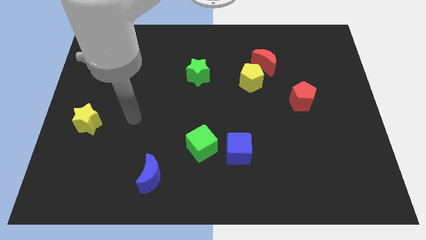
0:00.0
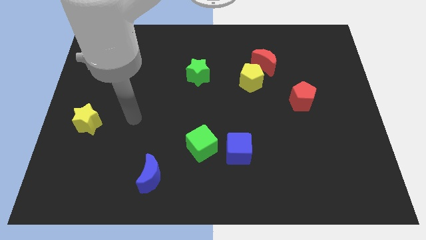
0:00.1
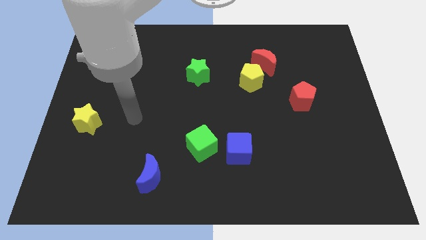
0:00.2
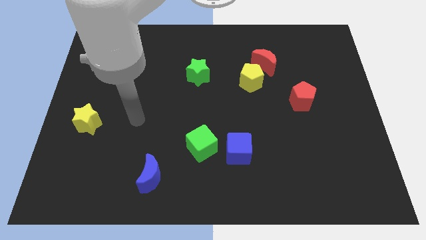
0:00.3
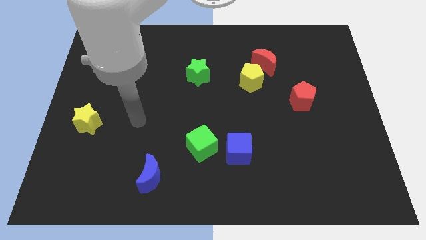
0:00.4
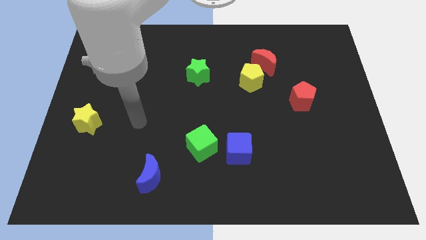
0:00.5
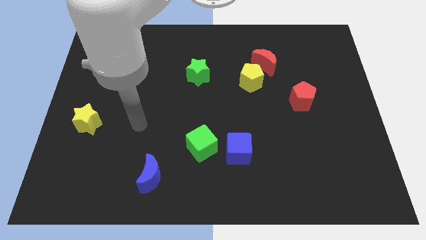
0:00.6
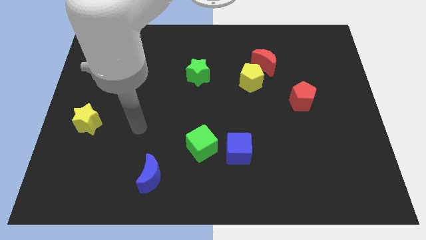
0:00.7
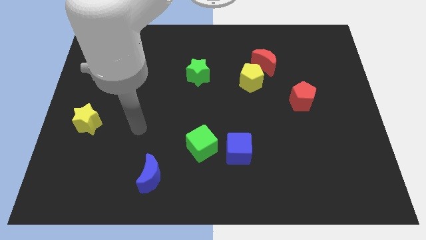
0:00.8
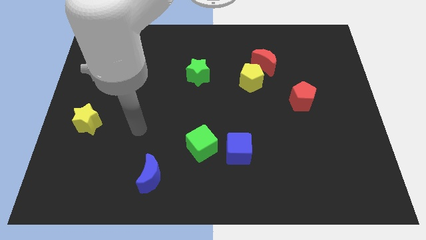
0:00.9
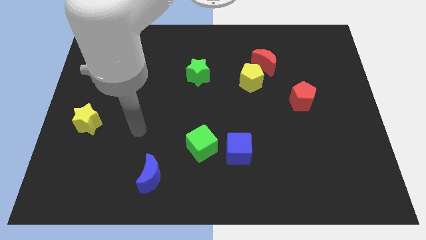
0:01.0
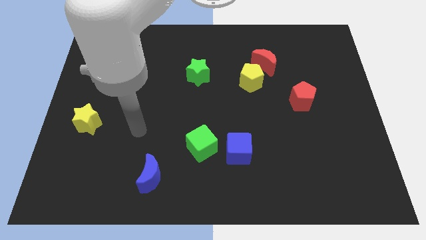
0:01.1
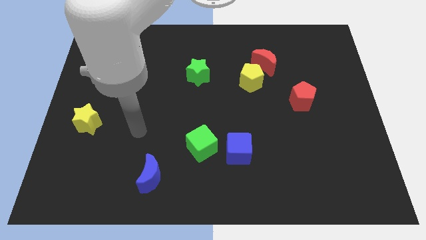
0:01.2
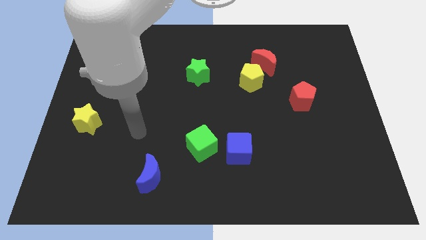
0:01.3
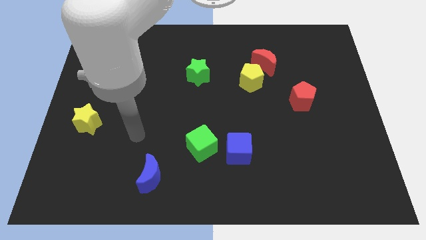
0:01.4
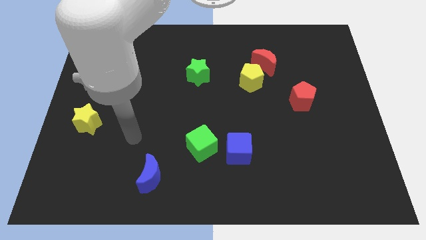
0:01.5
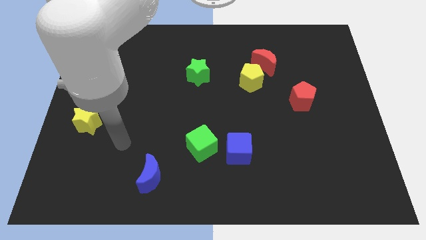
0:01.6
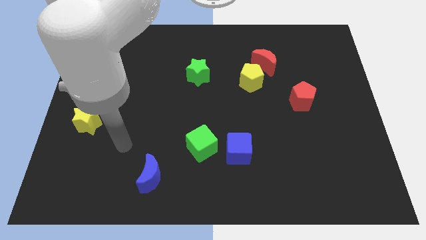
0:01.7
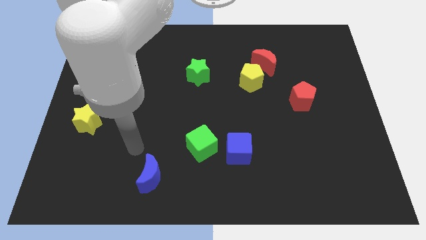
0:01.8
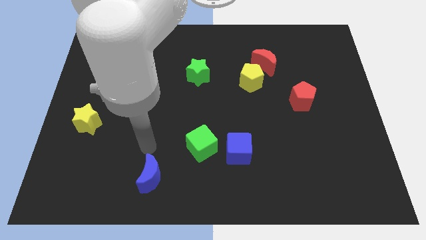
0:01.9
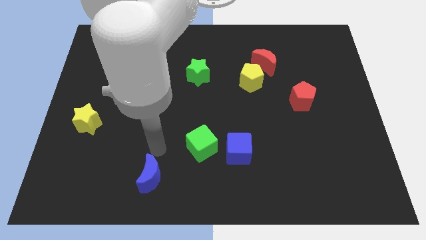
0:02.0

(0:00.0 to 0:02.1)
place your arm above blue moon

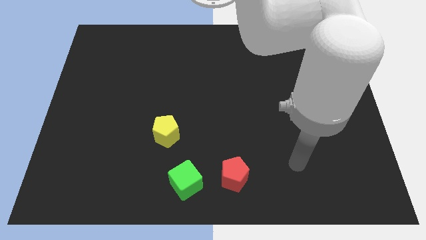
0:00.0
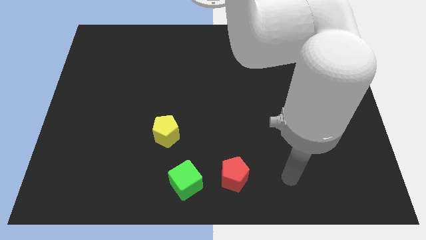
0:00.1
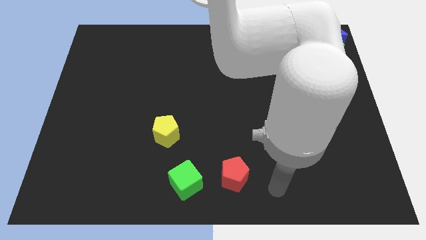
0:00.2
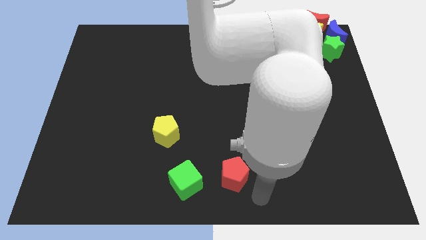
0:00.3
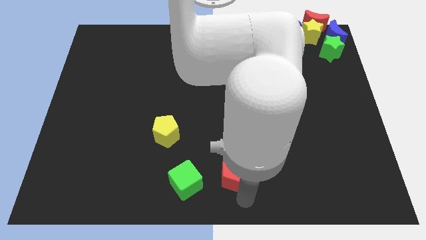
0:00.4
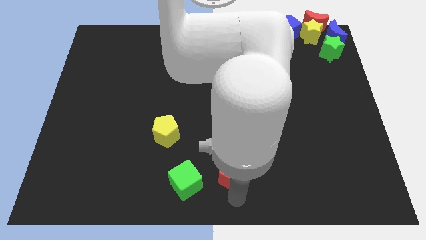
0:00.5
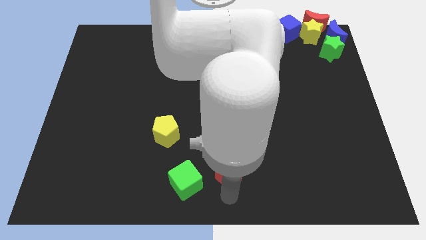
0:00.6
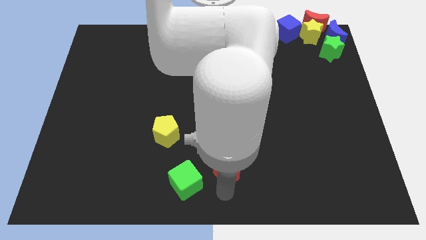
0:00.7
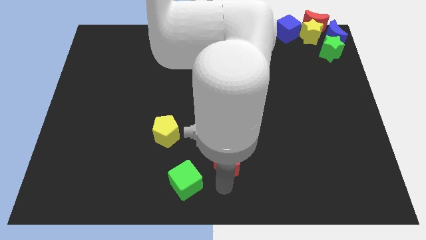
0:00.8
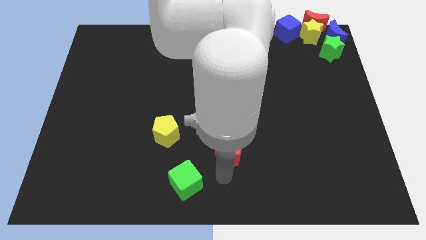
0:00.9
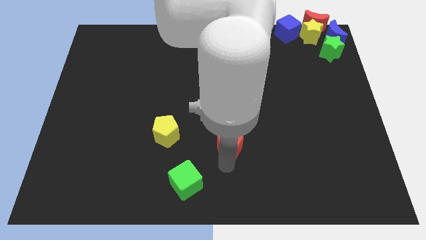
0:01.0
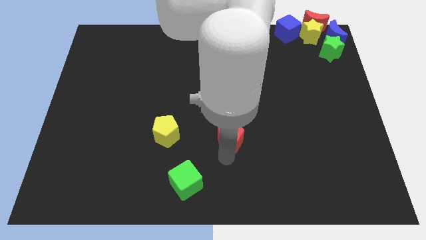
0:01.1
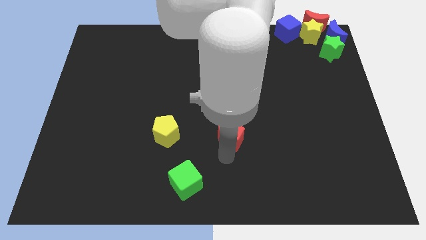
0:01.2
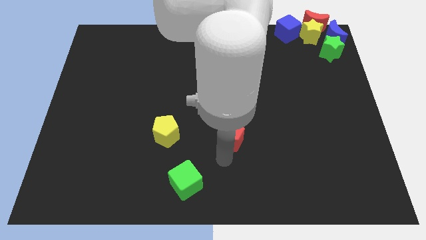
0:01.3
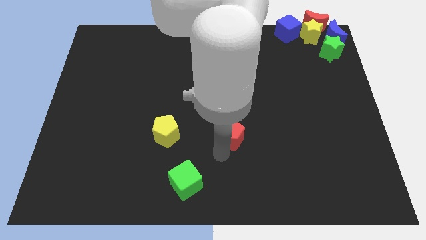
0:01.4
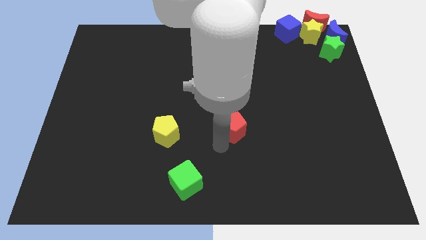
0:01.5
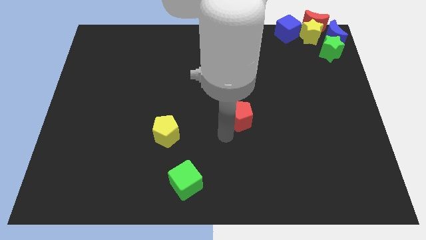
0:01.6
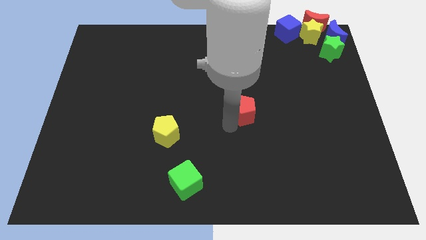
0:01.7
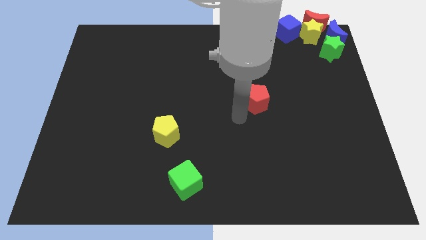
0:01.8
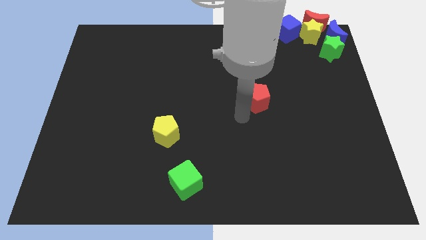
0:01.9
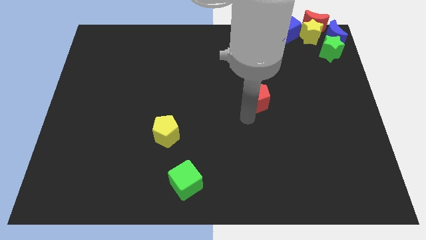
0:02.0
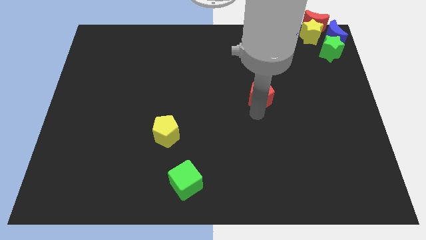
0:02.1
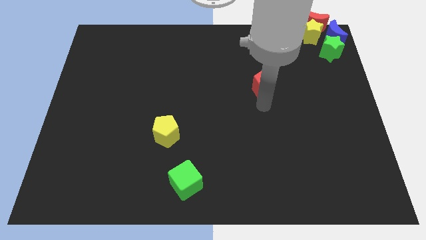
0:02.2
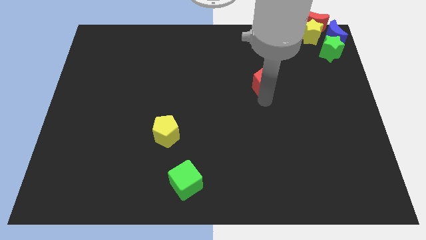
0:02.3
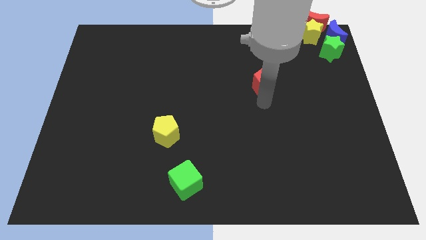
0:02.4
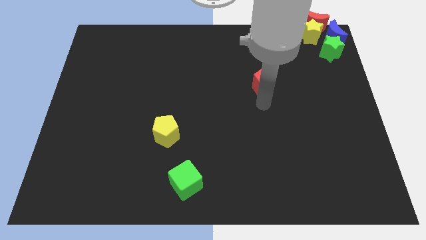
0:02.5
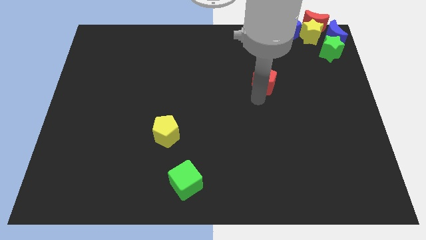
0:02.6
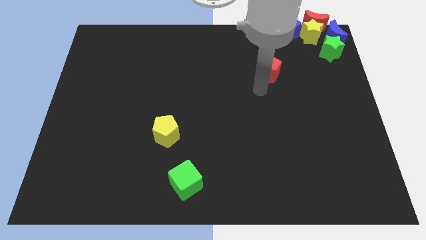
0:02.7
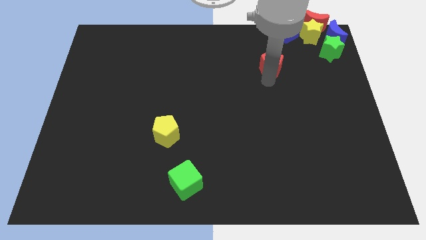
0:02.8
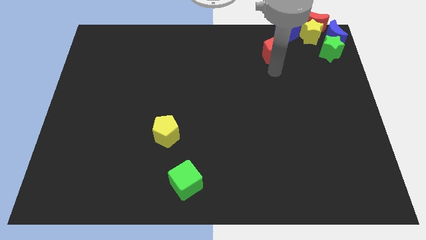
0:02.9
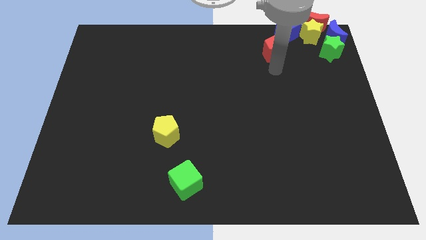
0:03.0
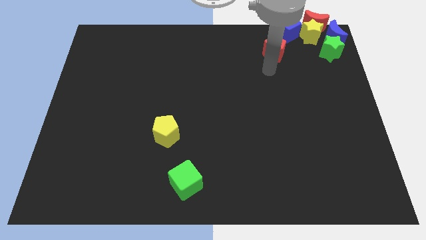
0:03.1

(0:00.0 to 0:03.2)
move red pentagon towards blue cube

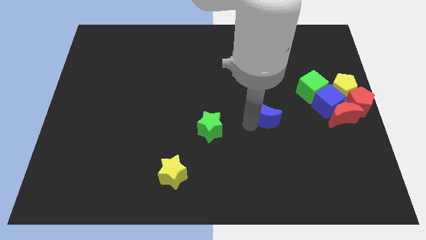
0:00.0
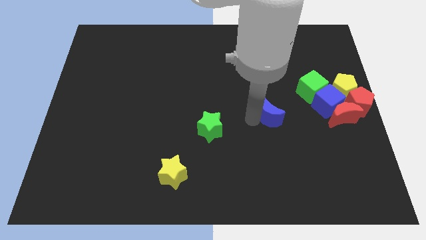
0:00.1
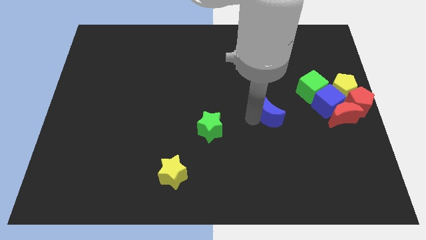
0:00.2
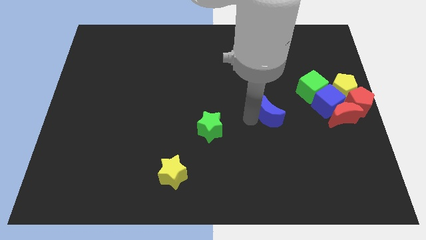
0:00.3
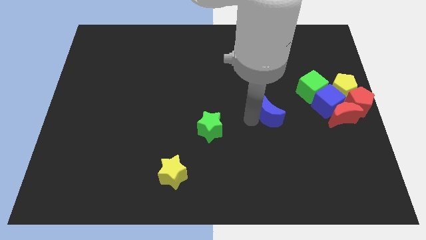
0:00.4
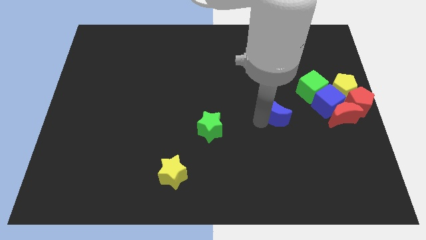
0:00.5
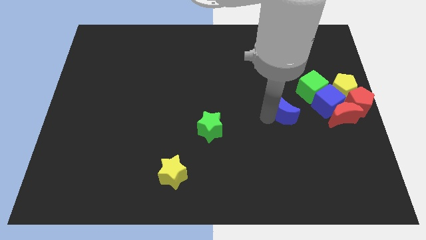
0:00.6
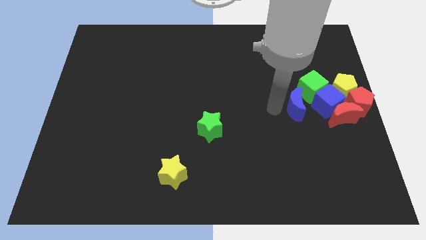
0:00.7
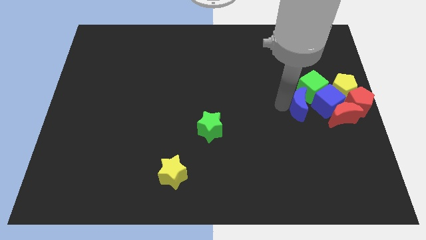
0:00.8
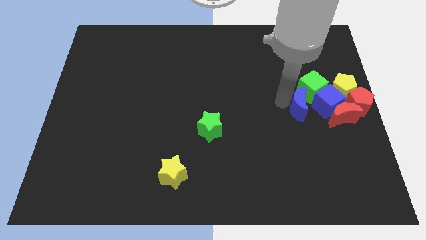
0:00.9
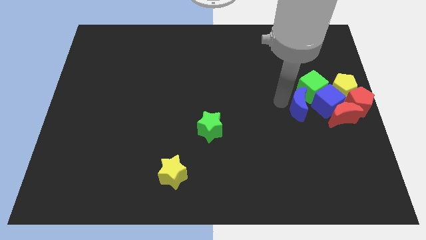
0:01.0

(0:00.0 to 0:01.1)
move the blue moon close to the green cube

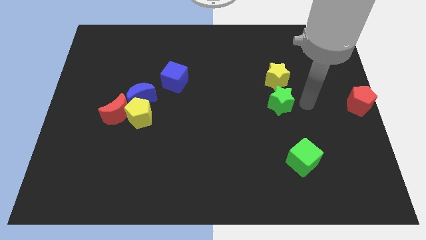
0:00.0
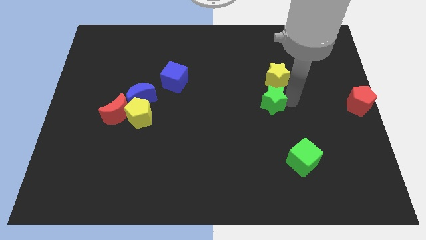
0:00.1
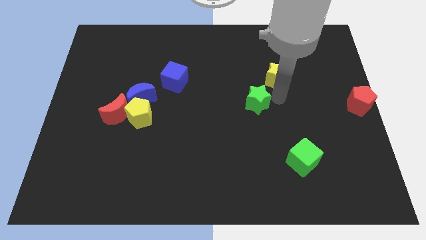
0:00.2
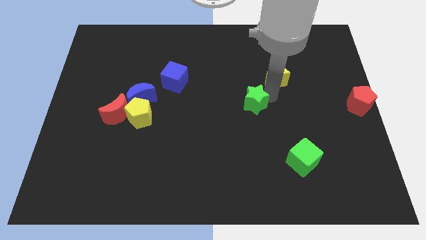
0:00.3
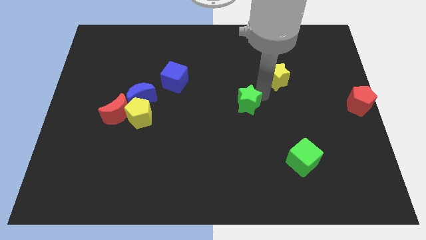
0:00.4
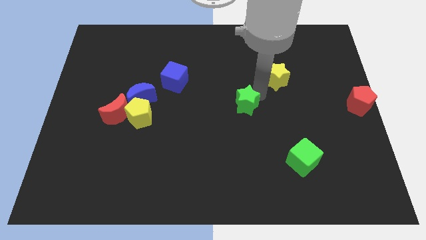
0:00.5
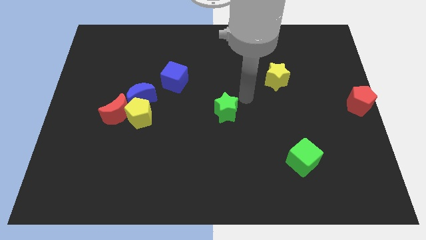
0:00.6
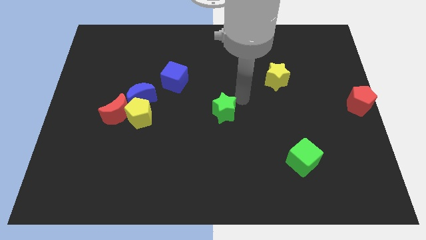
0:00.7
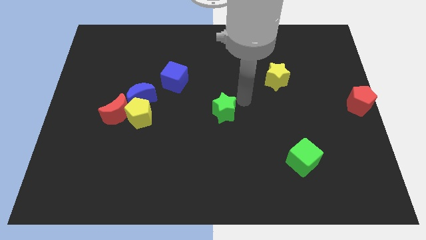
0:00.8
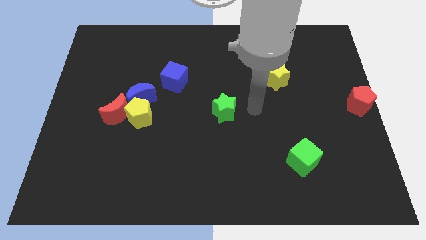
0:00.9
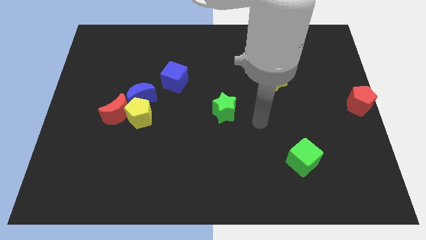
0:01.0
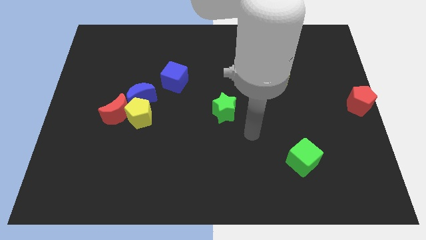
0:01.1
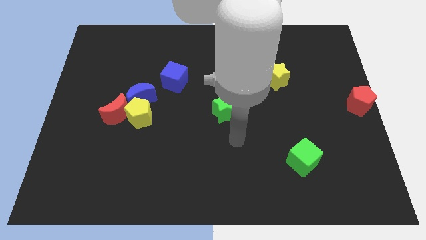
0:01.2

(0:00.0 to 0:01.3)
push green star slightly towards left side

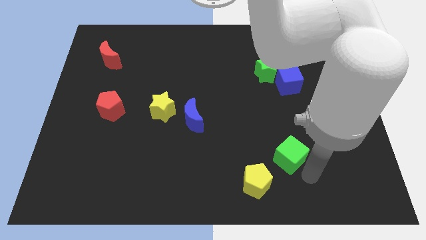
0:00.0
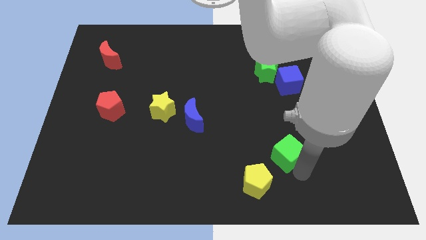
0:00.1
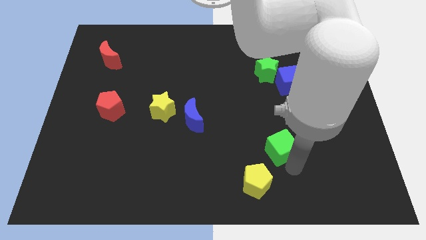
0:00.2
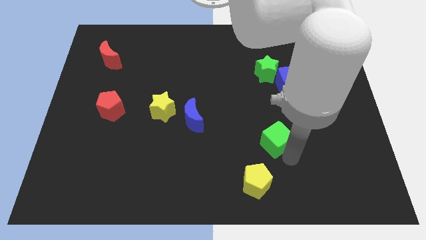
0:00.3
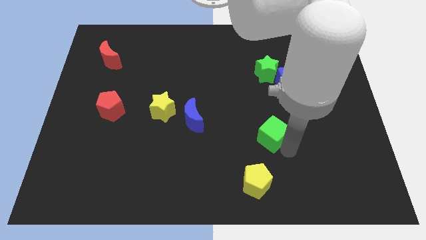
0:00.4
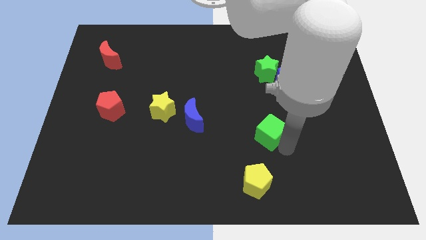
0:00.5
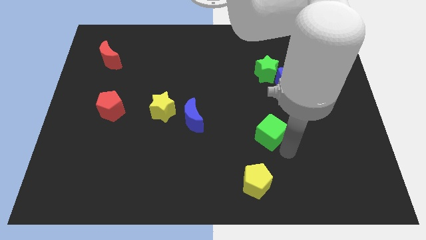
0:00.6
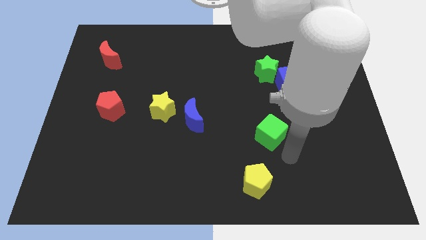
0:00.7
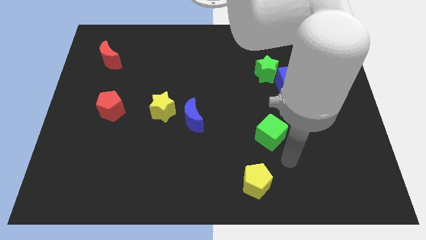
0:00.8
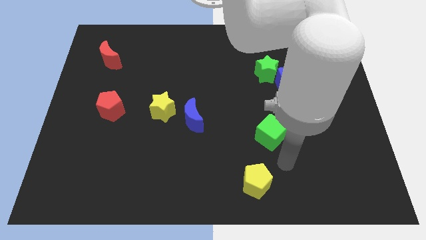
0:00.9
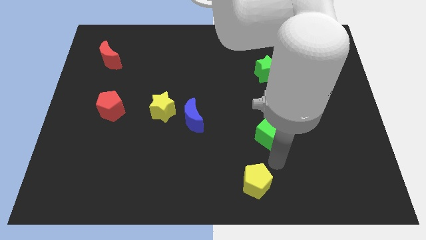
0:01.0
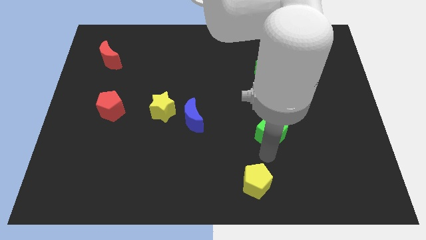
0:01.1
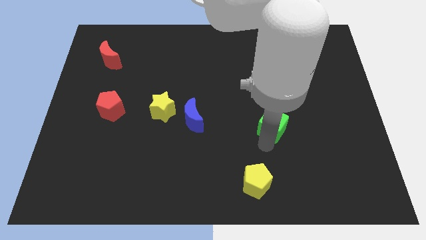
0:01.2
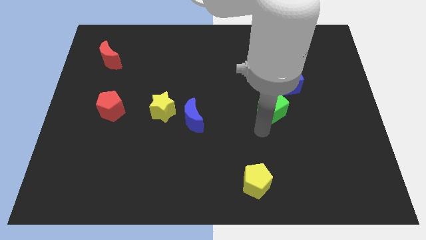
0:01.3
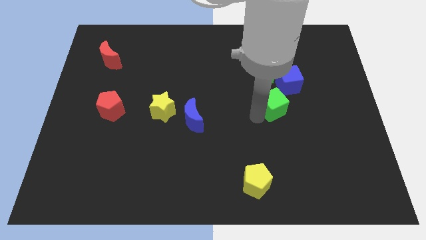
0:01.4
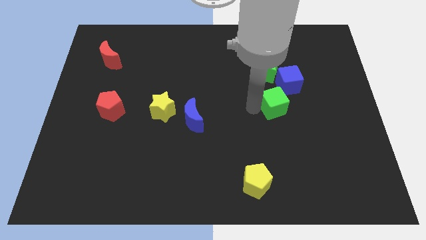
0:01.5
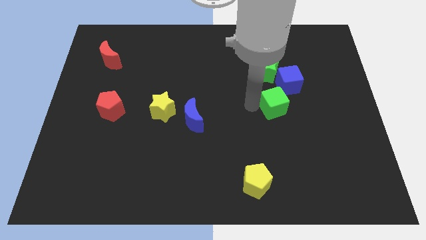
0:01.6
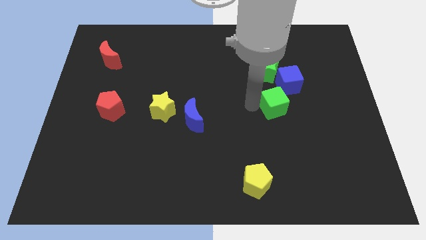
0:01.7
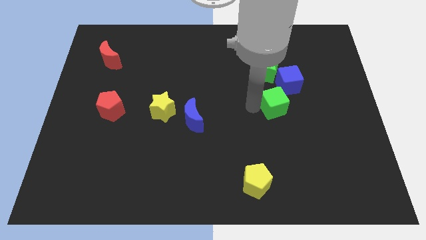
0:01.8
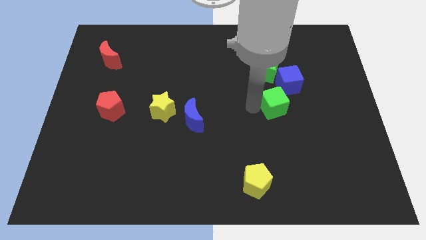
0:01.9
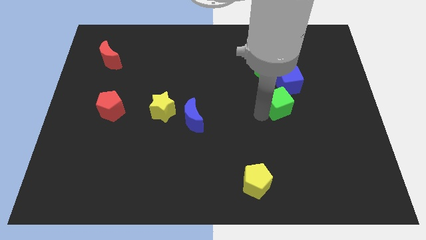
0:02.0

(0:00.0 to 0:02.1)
push green cube into the blue cube
